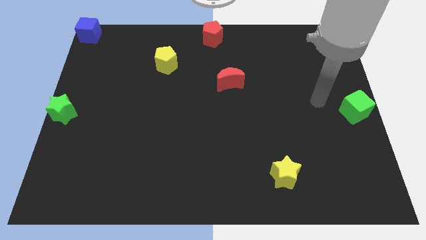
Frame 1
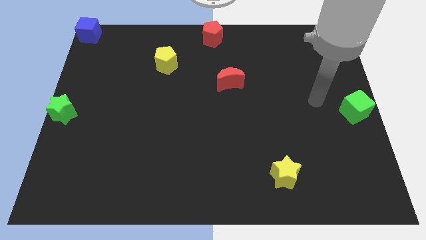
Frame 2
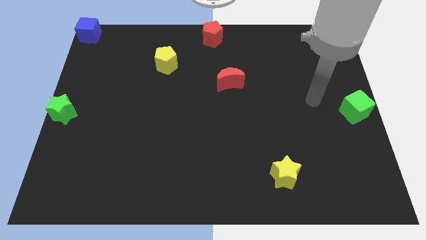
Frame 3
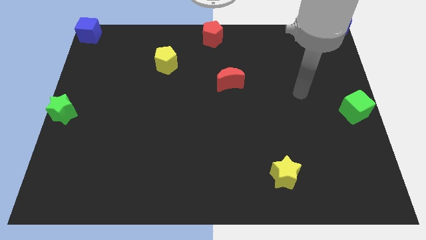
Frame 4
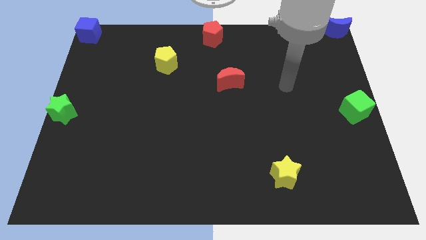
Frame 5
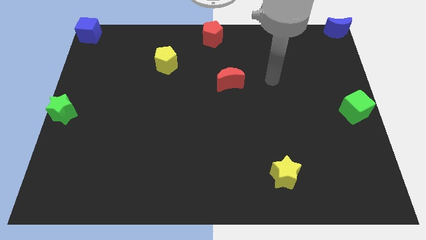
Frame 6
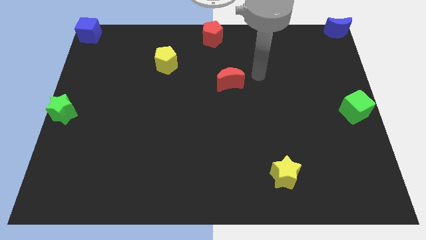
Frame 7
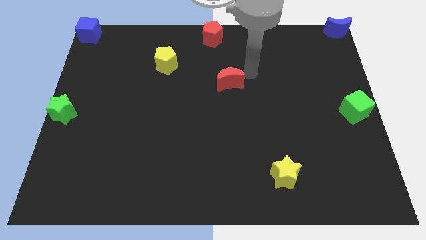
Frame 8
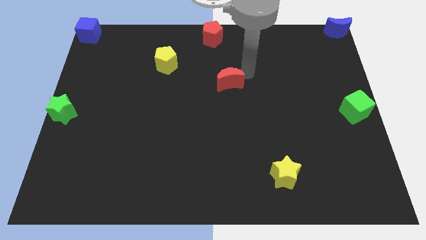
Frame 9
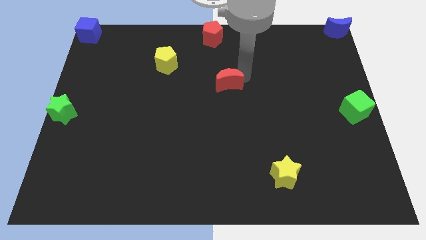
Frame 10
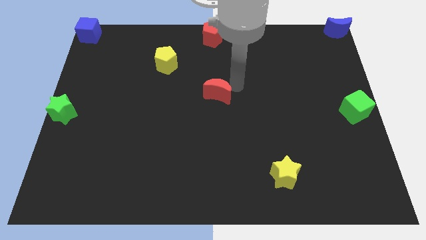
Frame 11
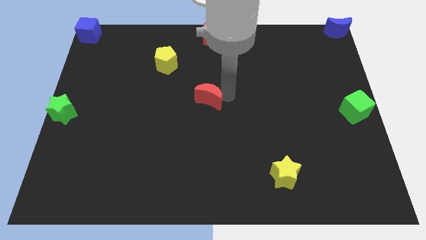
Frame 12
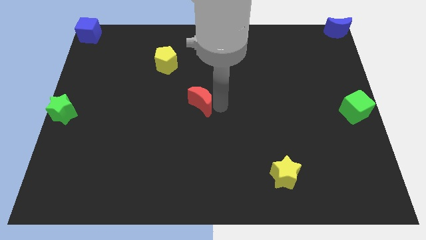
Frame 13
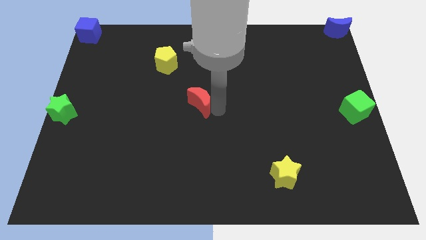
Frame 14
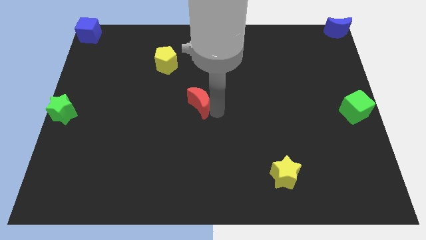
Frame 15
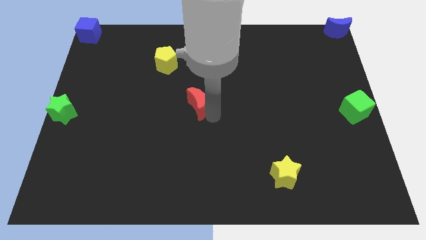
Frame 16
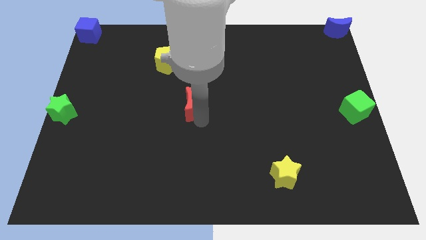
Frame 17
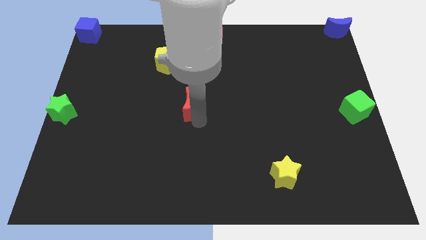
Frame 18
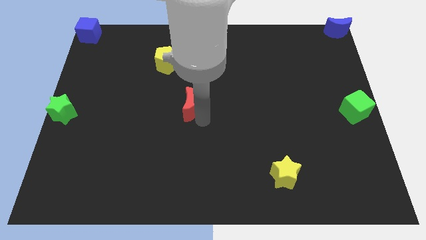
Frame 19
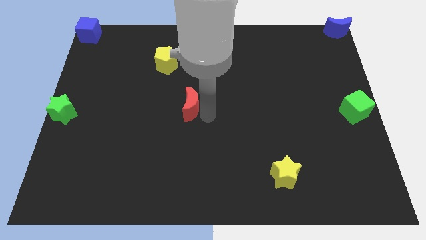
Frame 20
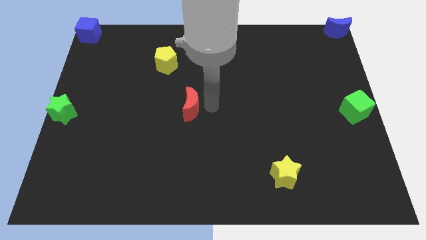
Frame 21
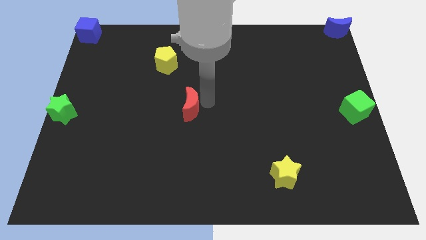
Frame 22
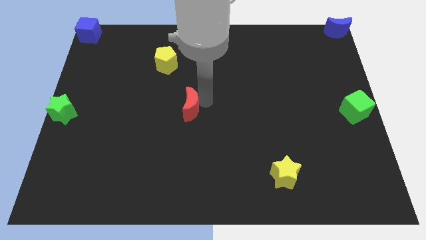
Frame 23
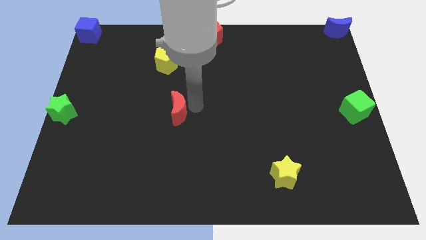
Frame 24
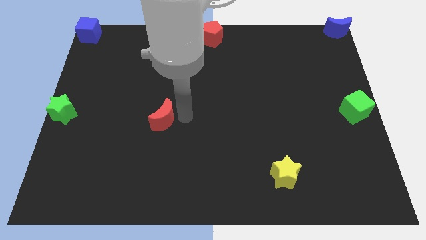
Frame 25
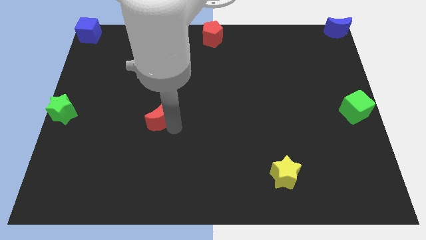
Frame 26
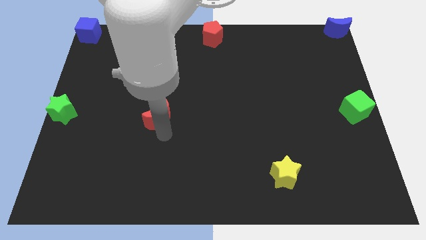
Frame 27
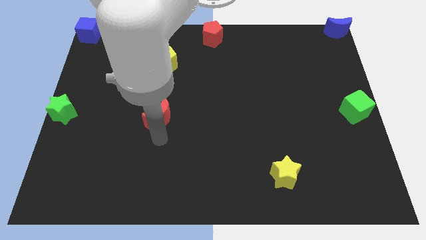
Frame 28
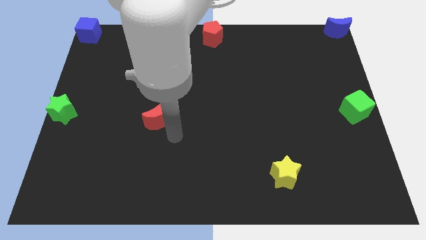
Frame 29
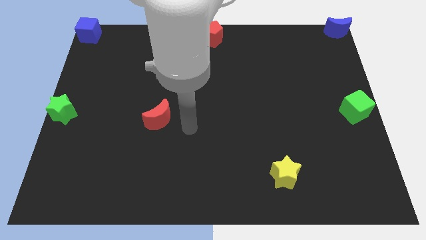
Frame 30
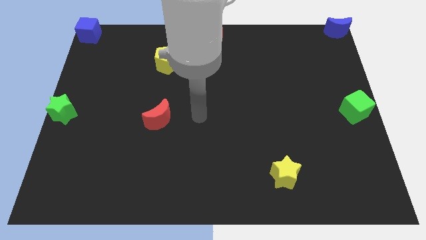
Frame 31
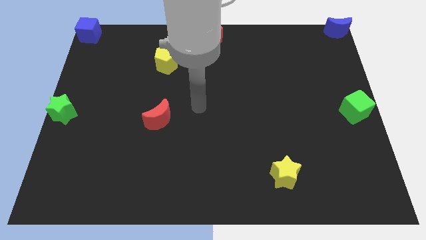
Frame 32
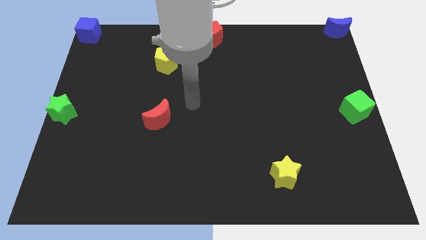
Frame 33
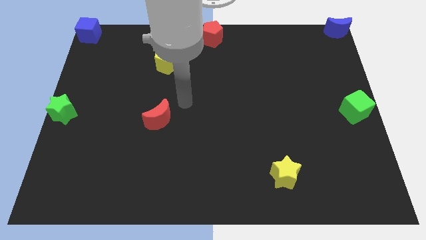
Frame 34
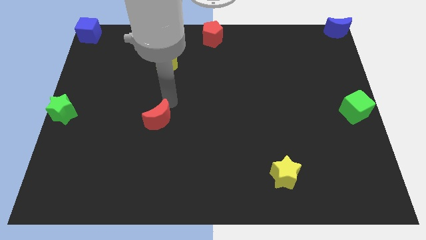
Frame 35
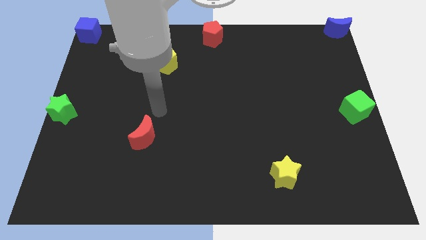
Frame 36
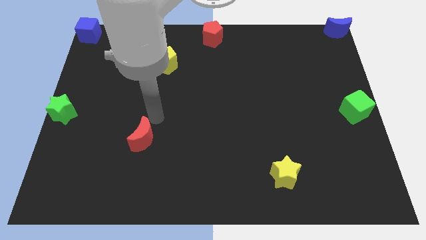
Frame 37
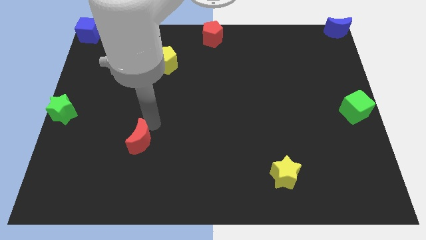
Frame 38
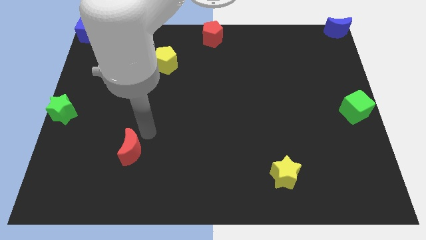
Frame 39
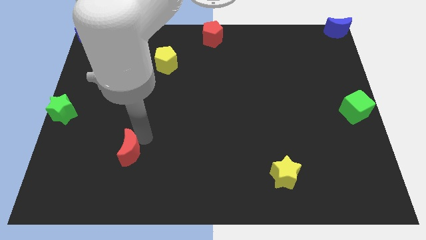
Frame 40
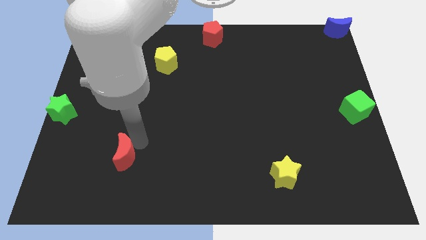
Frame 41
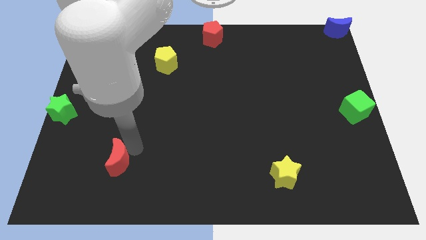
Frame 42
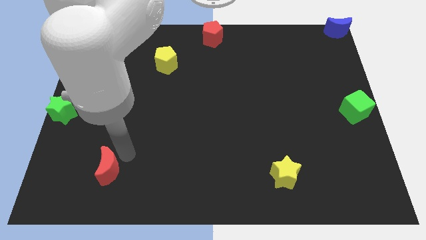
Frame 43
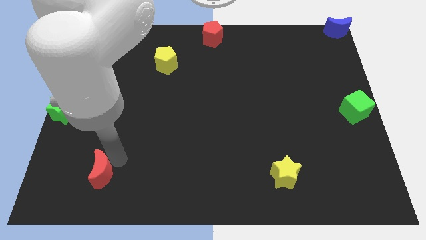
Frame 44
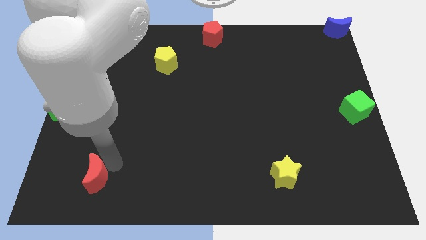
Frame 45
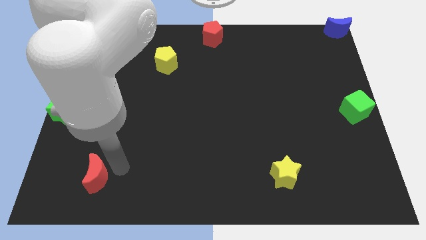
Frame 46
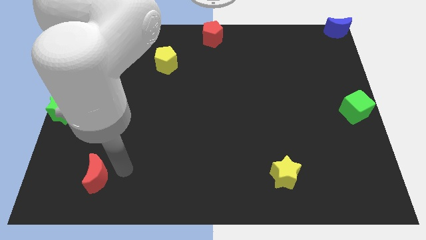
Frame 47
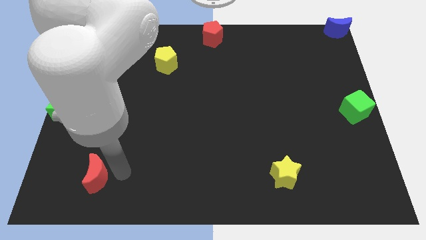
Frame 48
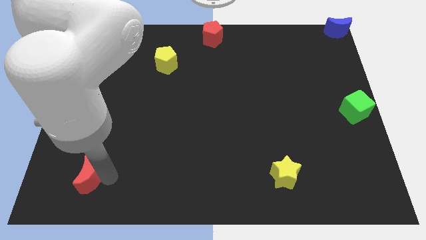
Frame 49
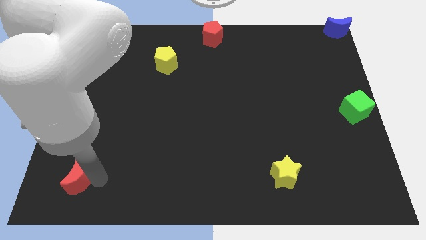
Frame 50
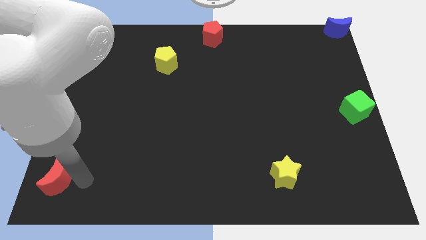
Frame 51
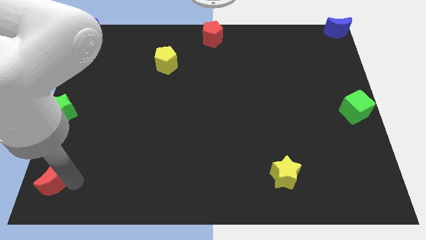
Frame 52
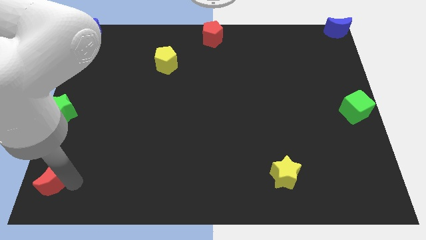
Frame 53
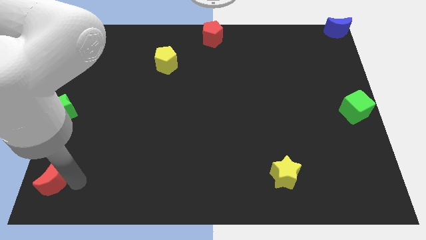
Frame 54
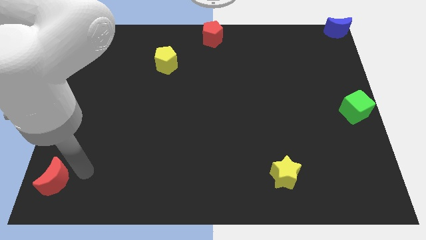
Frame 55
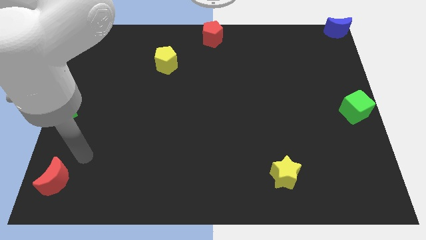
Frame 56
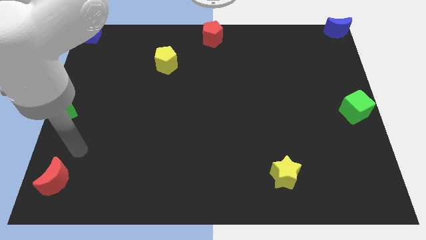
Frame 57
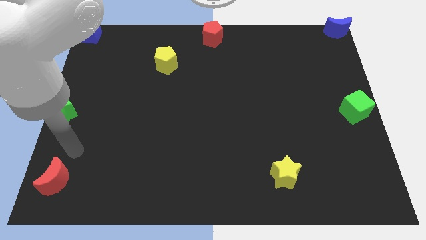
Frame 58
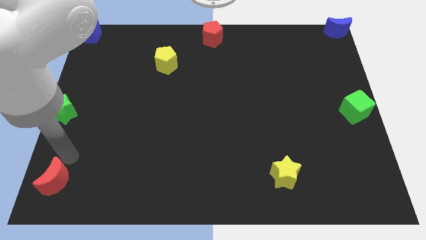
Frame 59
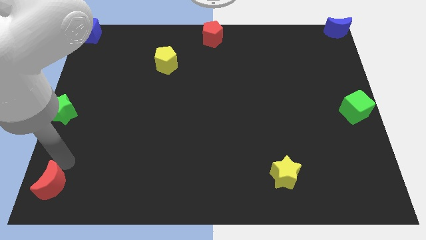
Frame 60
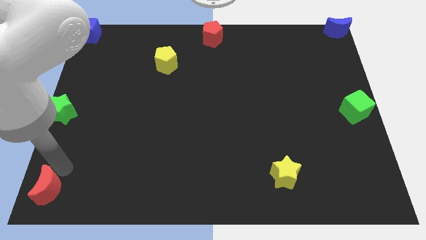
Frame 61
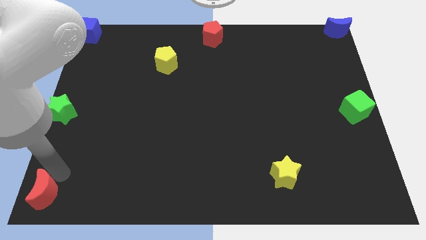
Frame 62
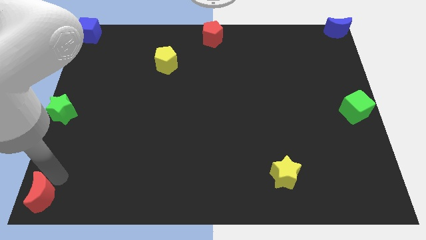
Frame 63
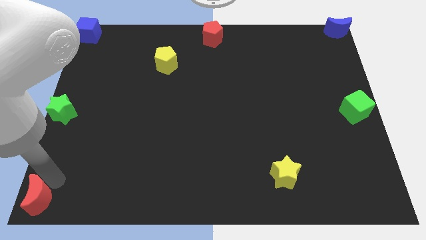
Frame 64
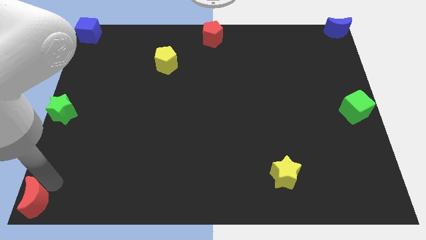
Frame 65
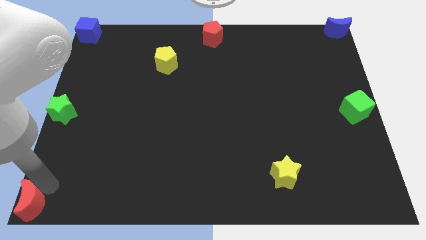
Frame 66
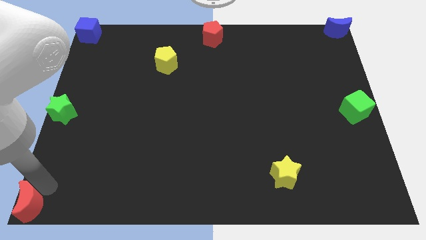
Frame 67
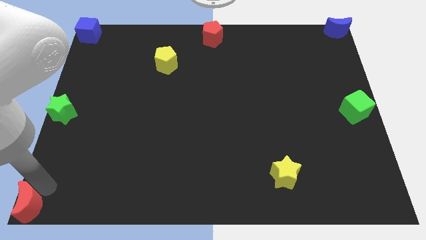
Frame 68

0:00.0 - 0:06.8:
push the red moon to the bottom left corner side of the board

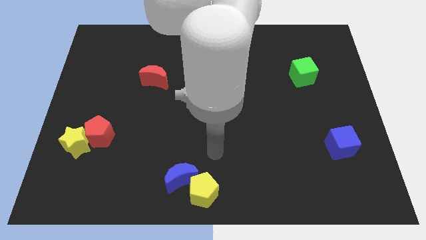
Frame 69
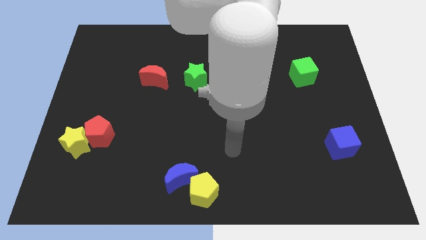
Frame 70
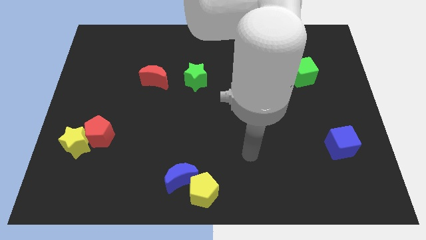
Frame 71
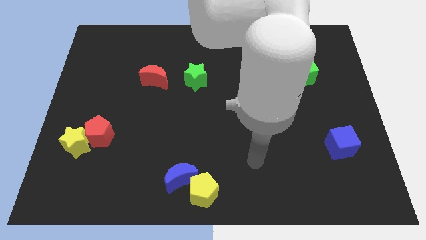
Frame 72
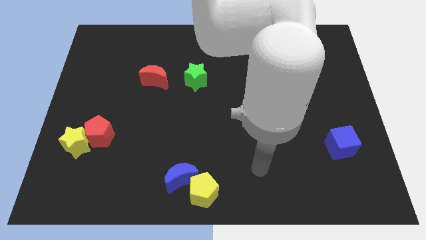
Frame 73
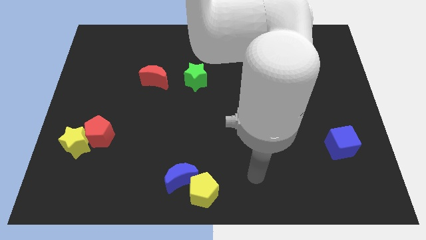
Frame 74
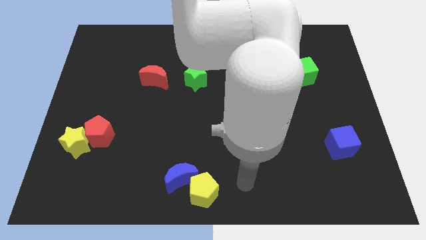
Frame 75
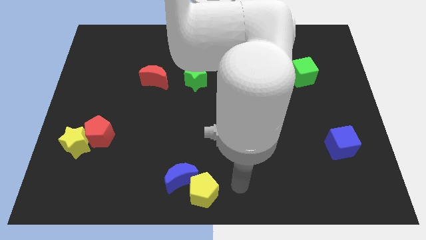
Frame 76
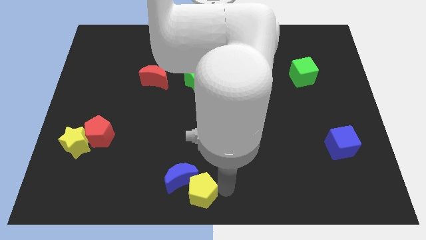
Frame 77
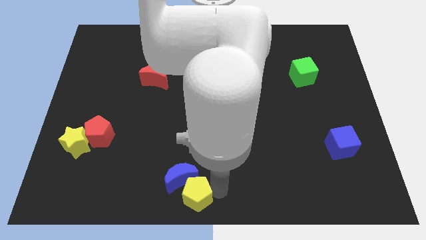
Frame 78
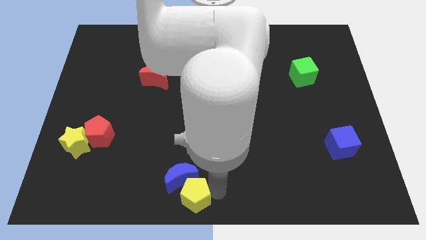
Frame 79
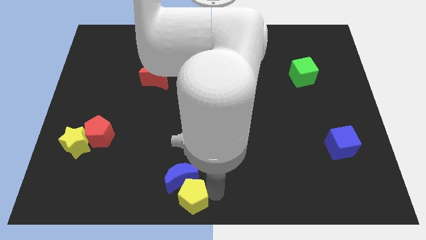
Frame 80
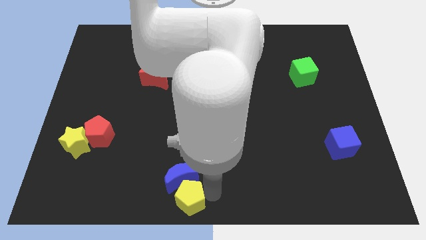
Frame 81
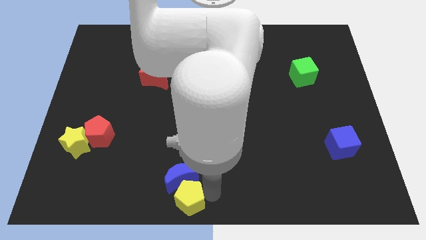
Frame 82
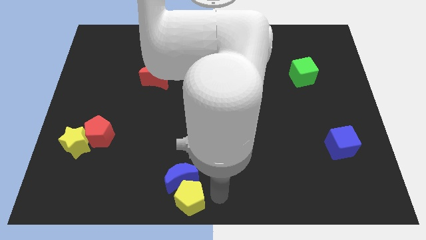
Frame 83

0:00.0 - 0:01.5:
place the yellow pentagon below the blue crescent

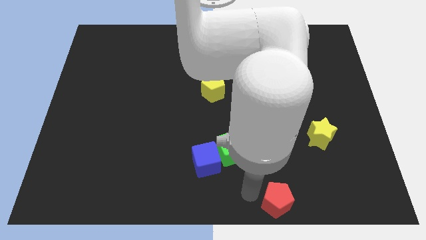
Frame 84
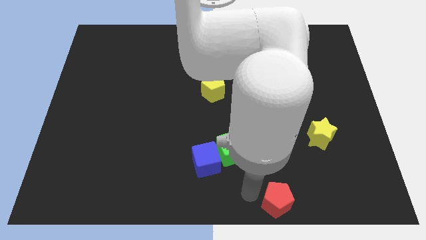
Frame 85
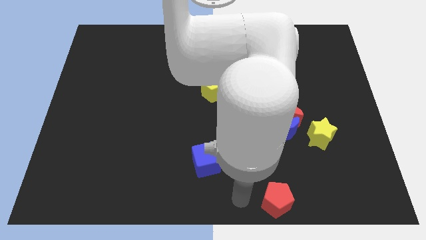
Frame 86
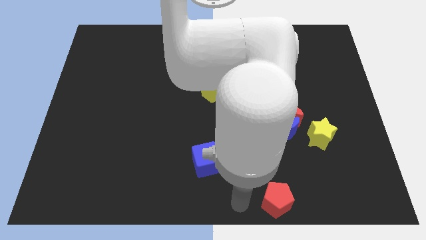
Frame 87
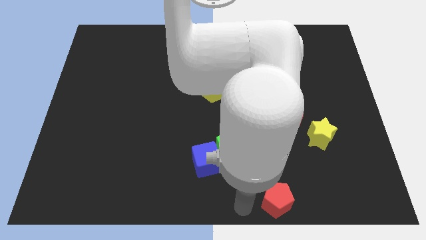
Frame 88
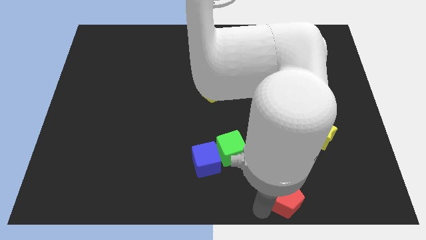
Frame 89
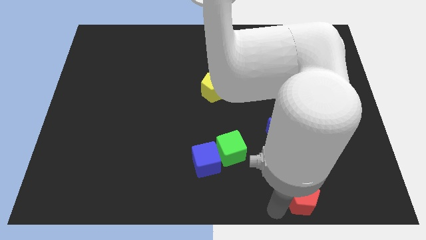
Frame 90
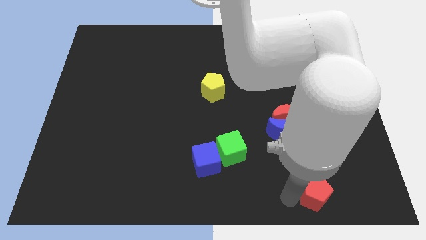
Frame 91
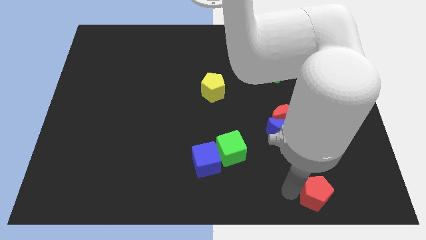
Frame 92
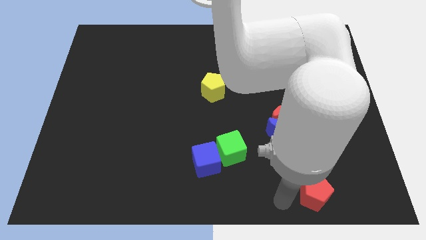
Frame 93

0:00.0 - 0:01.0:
push the red pentagon to the right of the board
